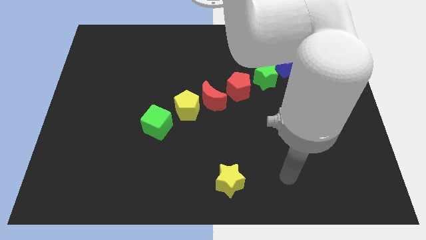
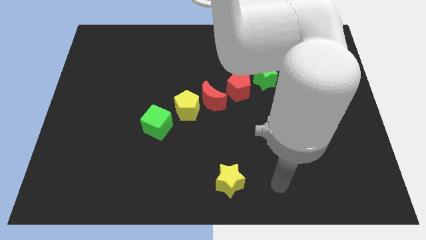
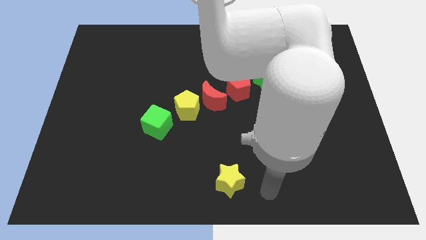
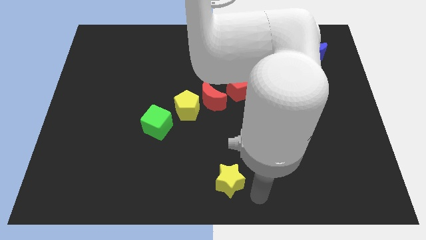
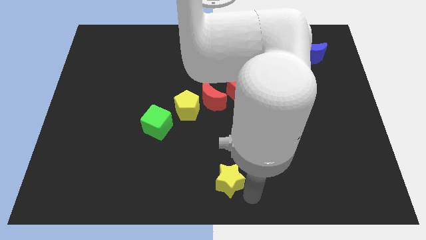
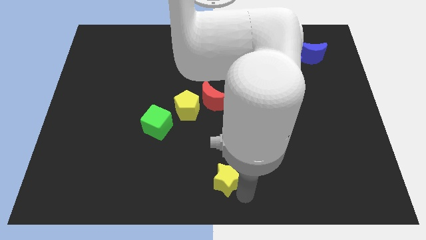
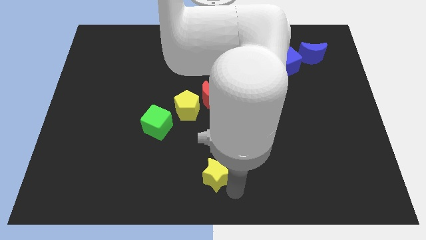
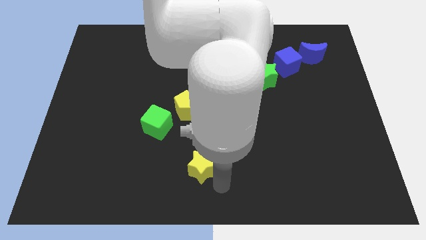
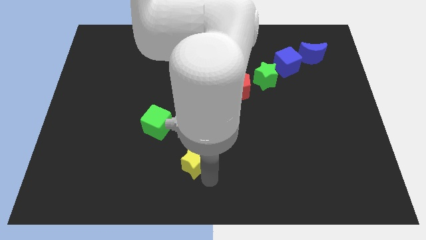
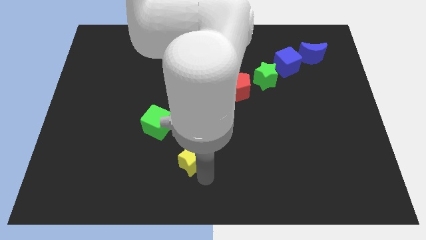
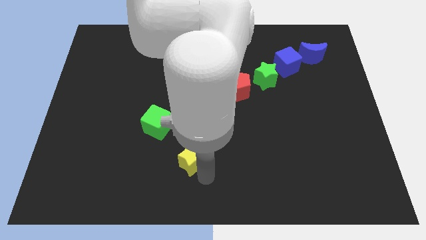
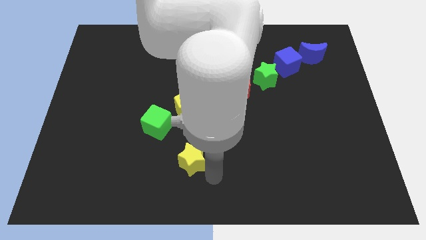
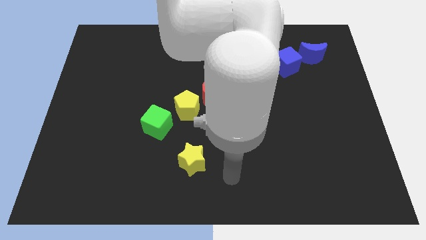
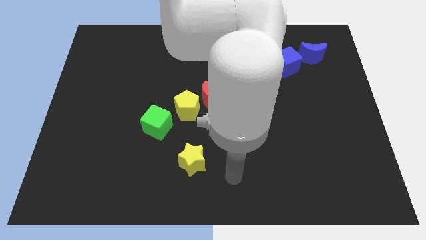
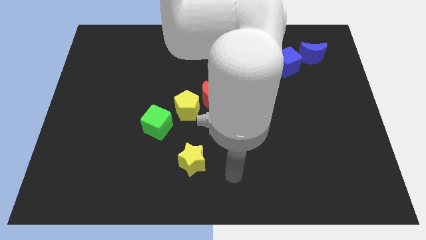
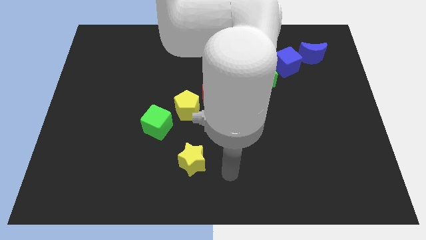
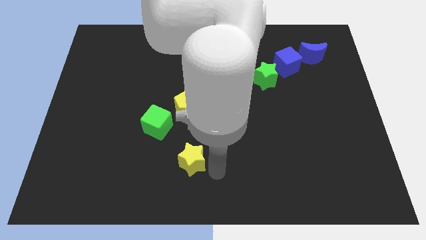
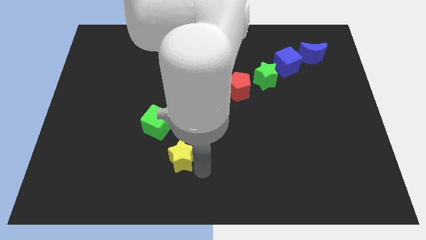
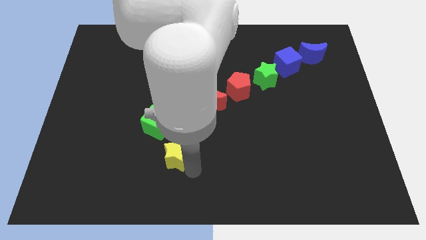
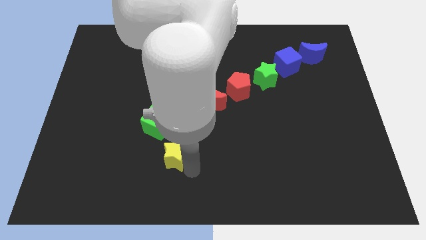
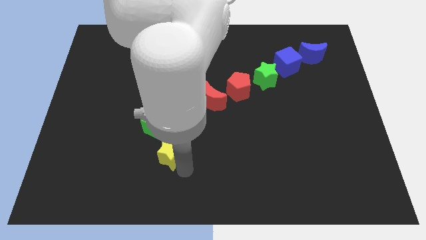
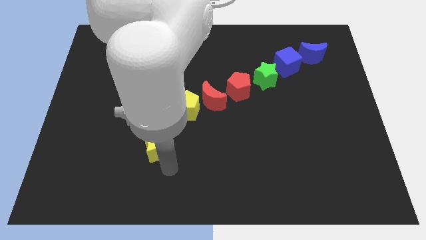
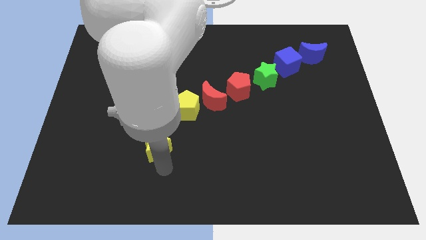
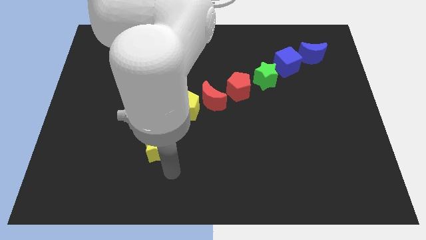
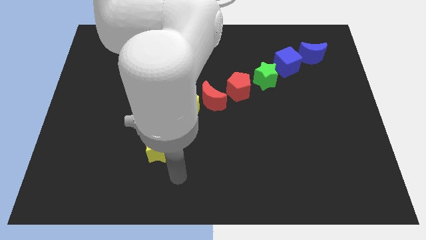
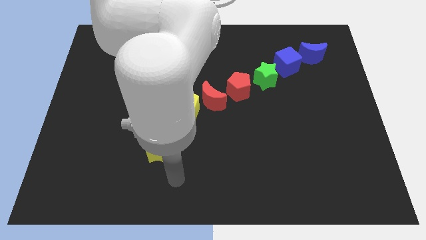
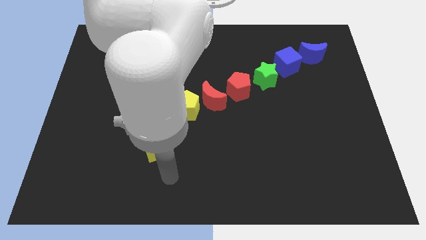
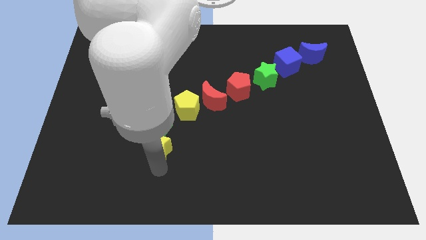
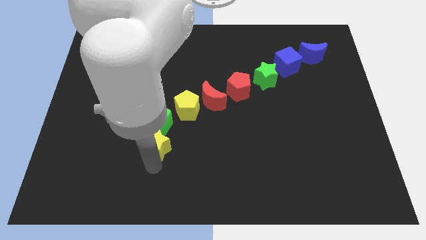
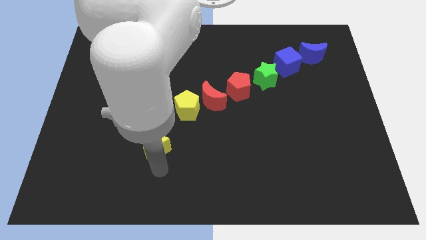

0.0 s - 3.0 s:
put the yellow star below green cube

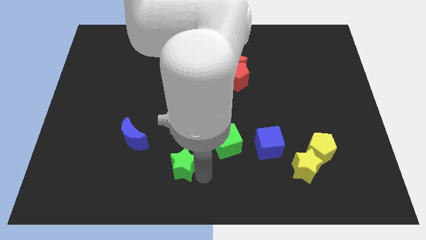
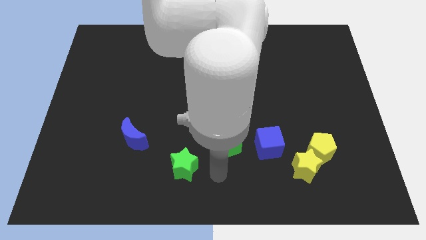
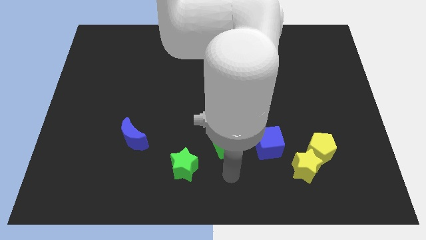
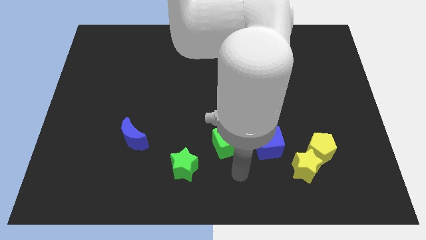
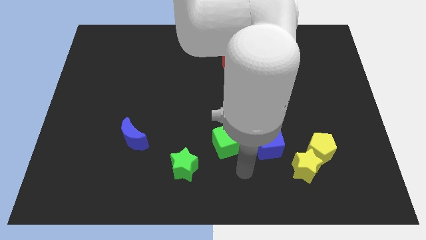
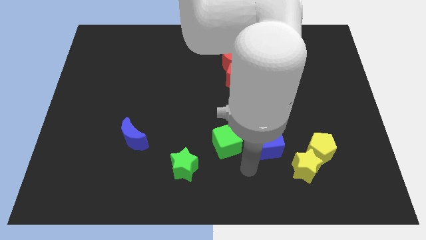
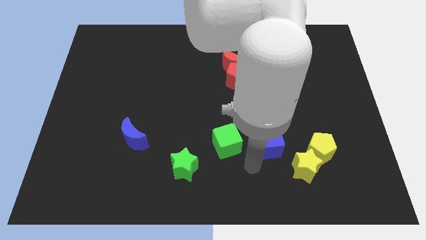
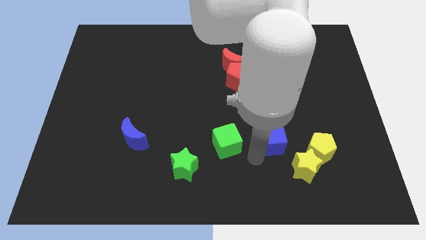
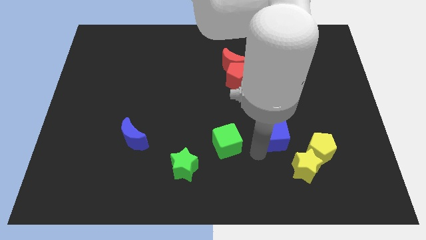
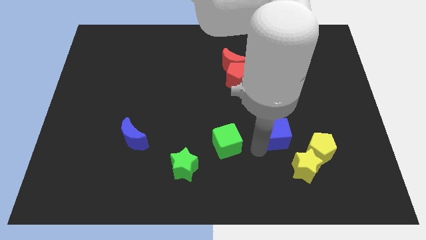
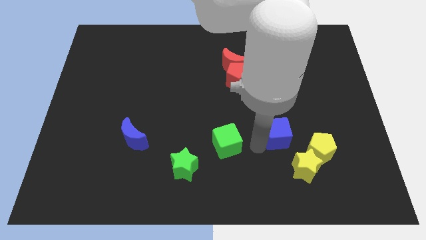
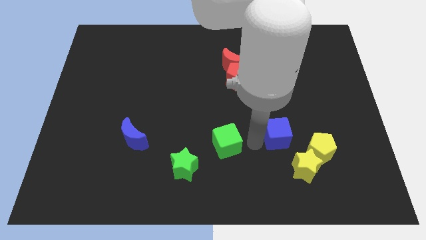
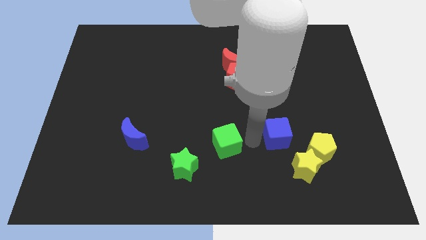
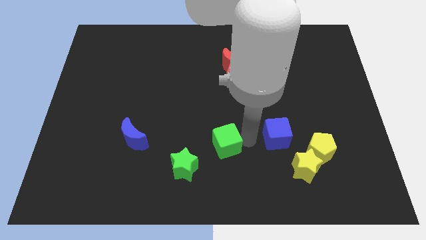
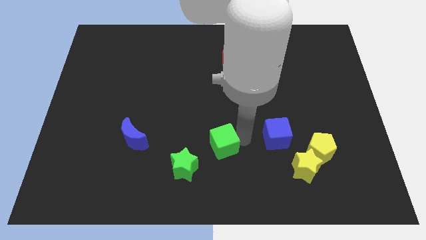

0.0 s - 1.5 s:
place the blue cube diagonal to the yellow star

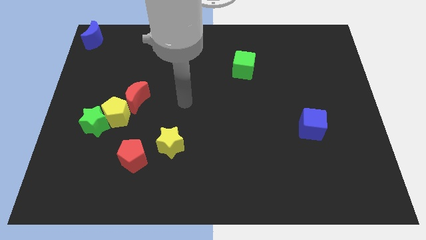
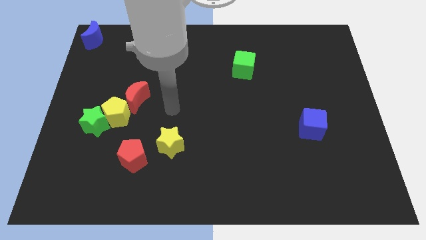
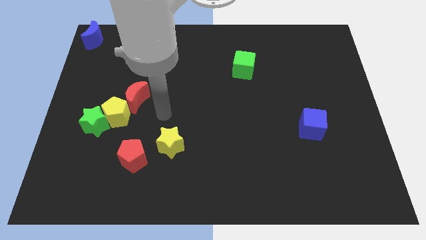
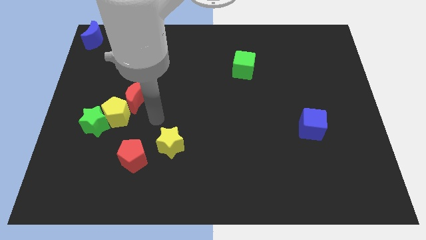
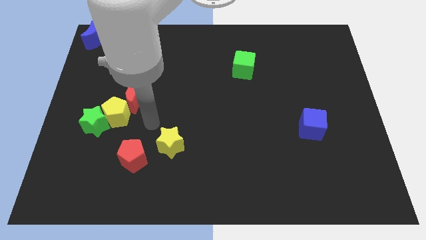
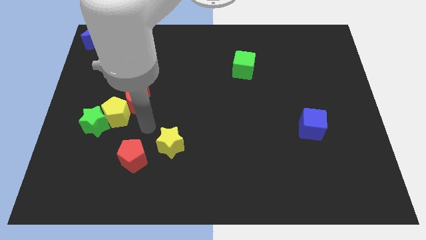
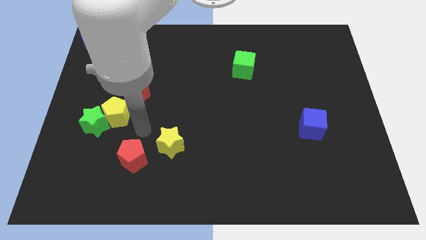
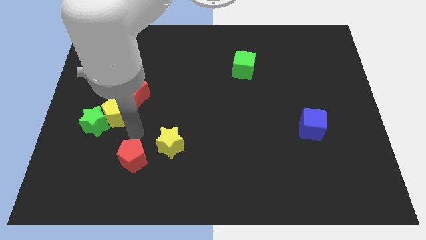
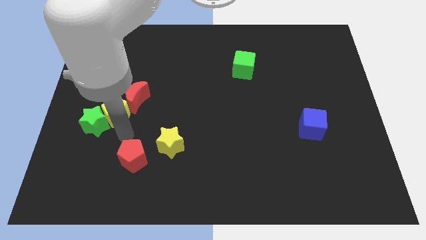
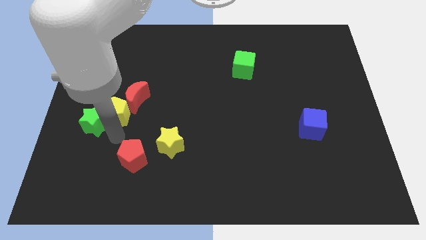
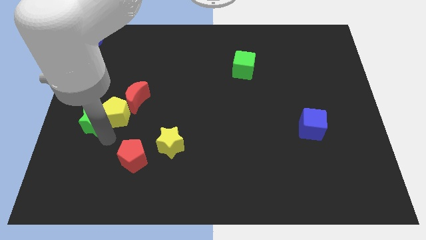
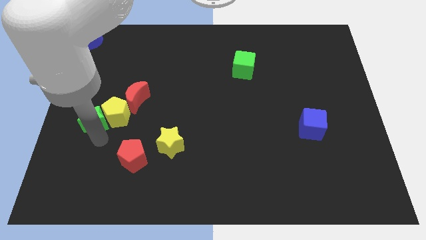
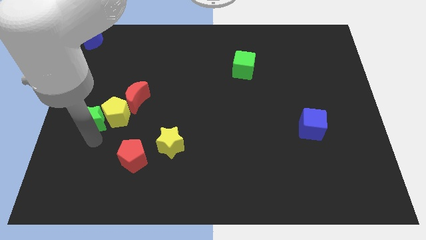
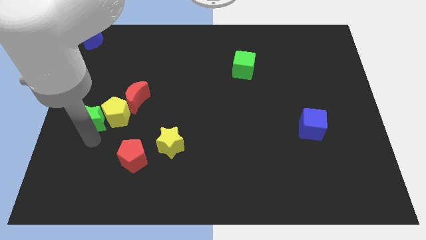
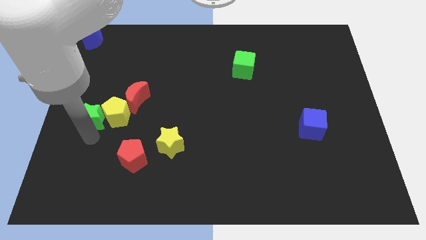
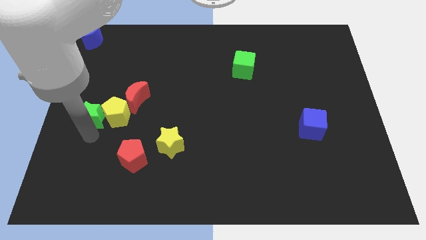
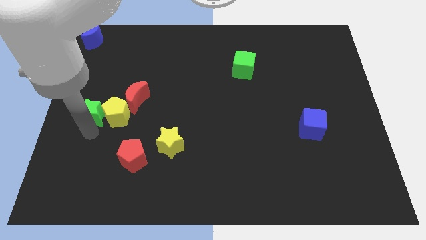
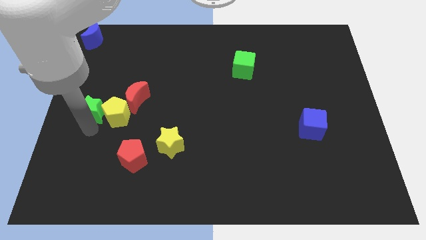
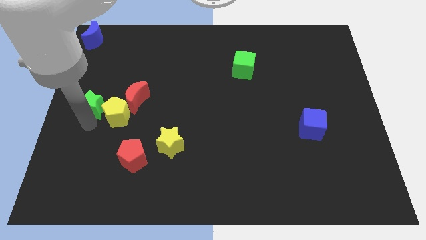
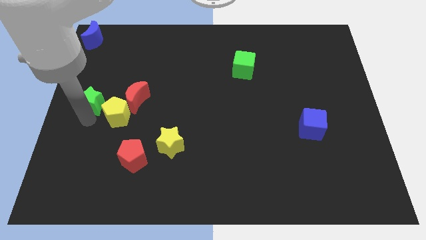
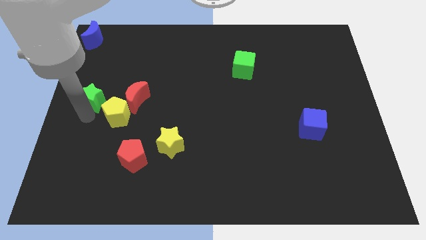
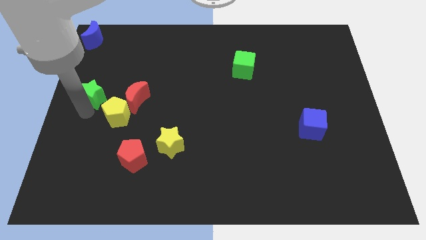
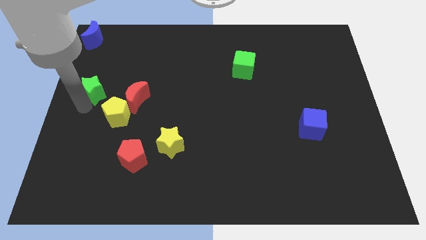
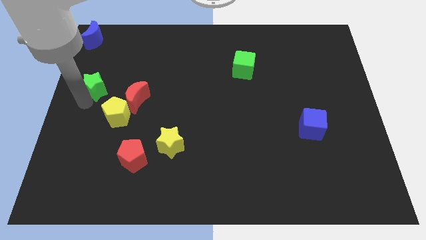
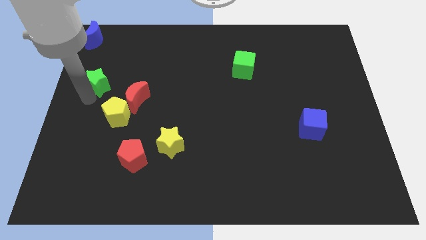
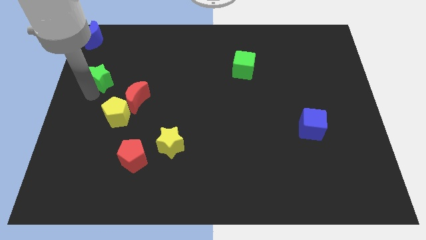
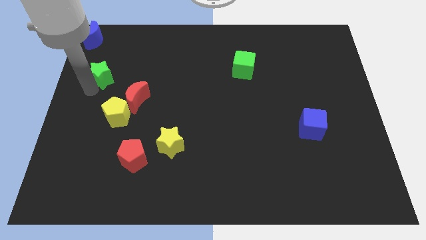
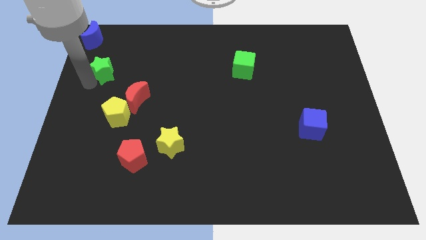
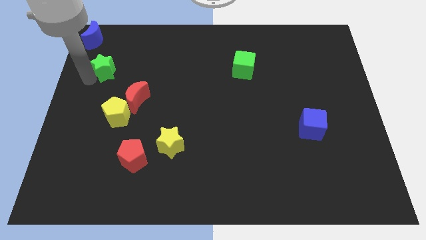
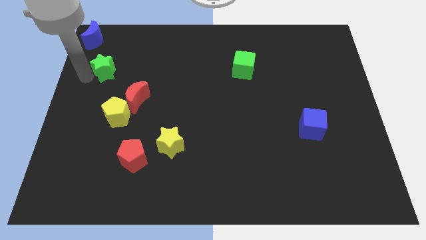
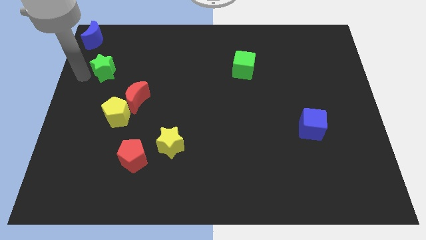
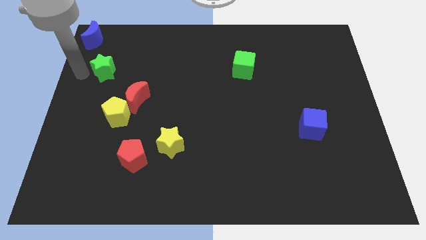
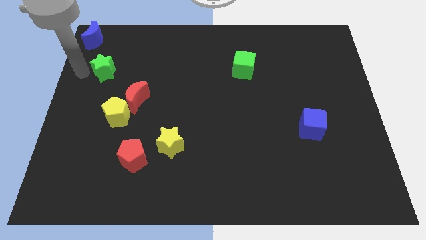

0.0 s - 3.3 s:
move the green star below the blue moon diagonally

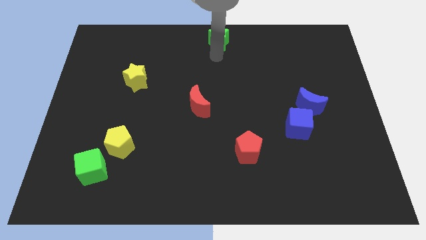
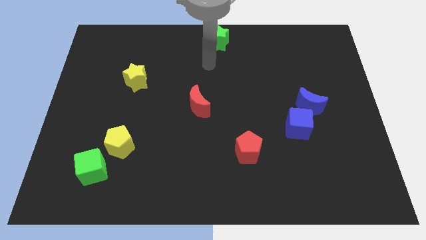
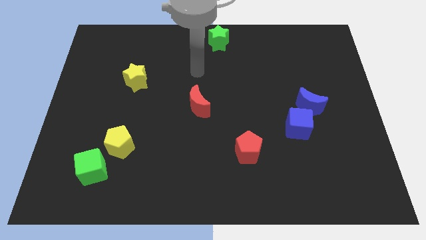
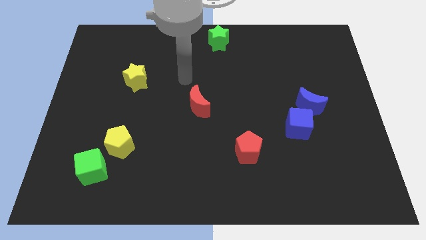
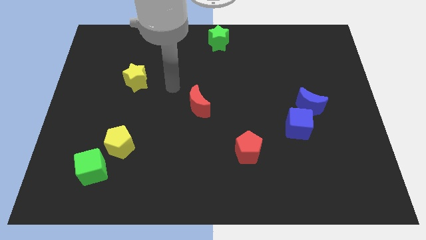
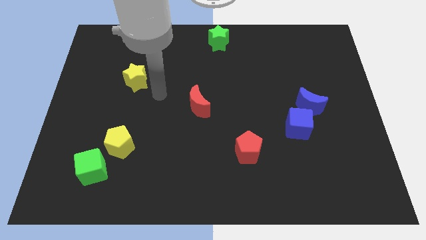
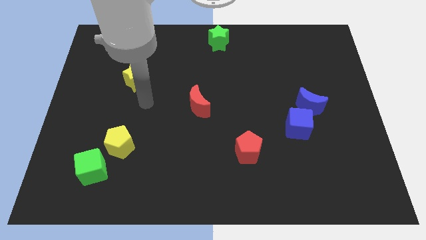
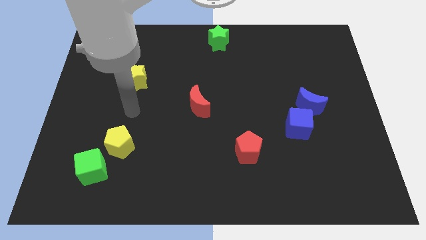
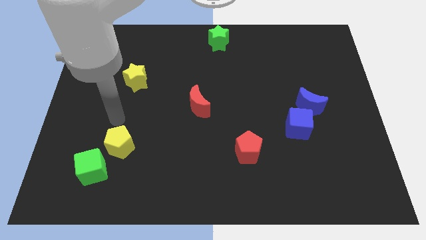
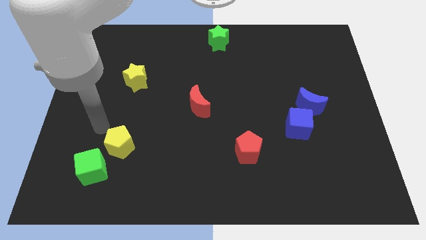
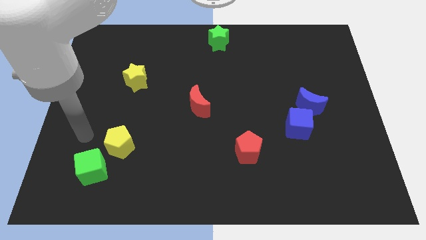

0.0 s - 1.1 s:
move the arm towards the bottom side of the board
